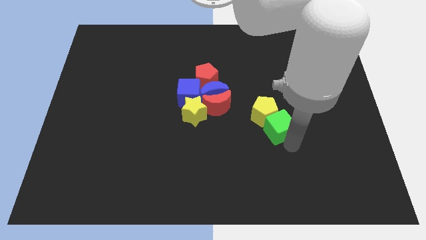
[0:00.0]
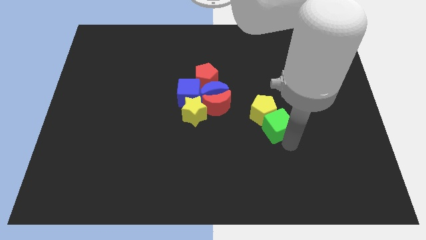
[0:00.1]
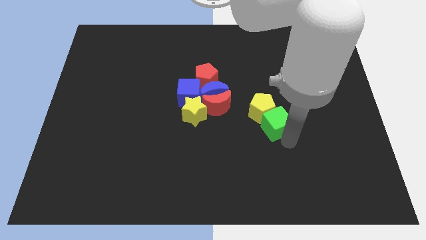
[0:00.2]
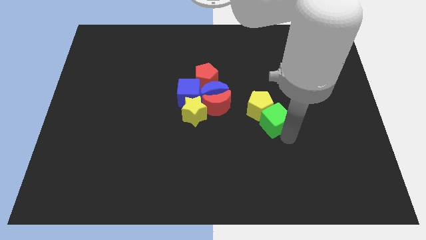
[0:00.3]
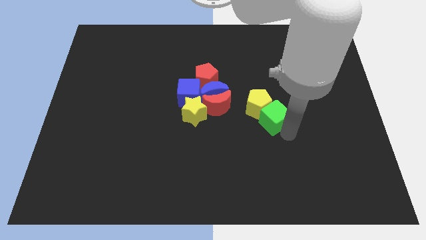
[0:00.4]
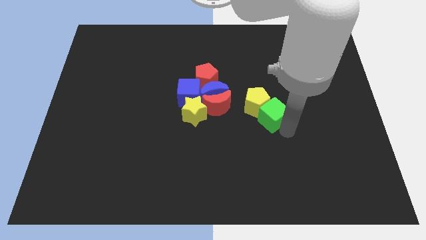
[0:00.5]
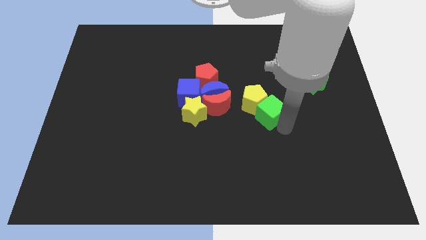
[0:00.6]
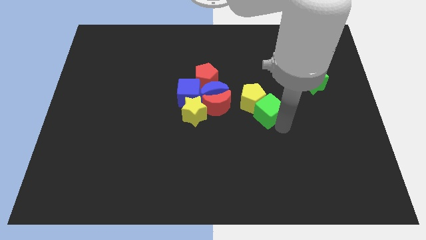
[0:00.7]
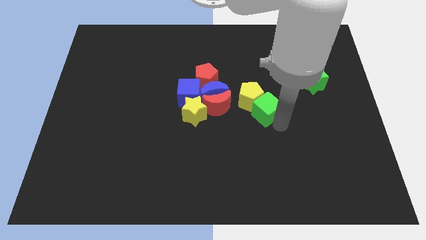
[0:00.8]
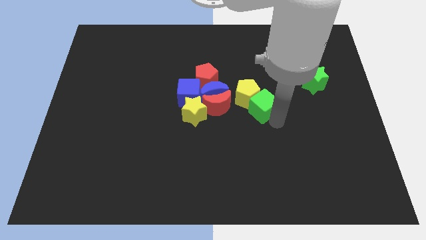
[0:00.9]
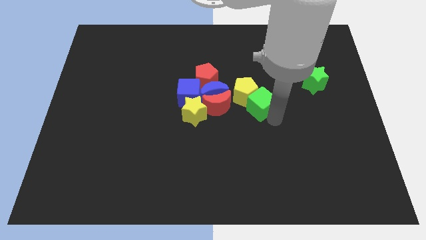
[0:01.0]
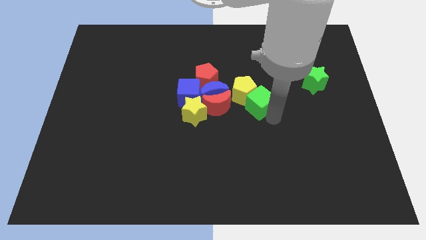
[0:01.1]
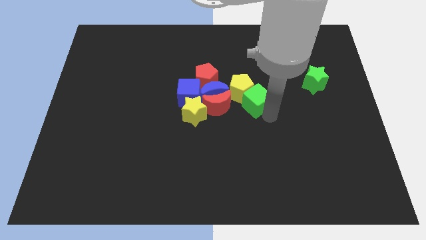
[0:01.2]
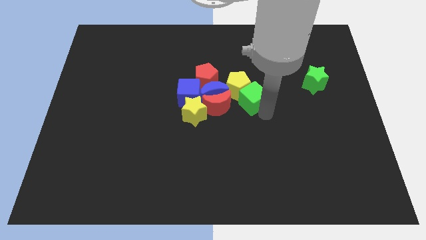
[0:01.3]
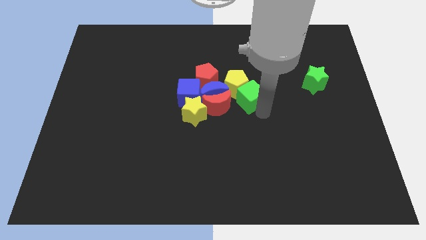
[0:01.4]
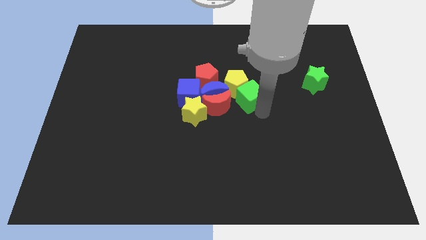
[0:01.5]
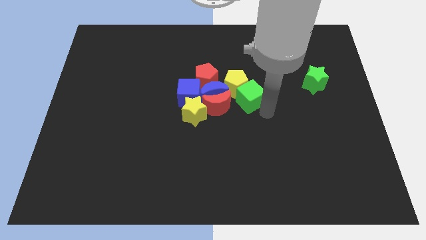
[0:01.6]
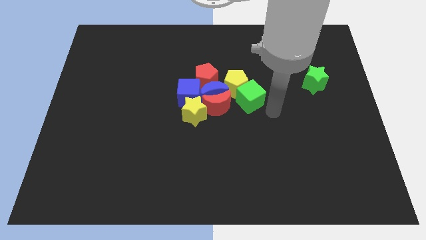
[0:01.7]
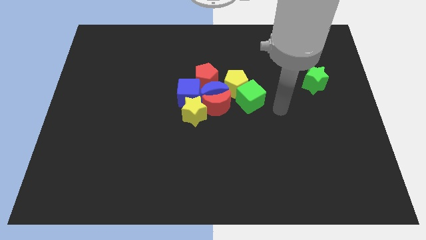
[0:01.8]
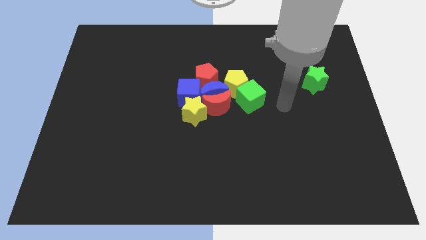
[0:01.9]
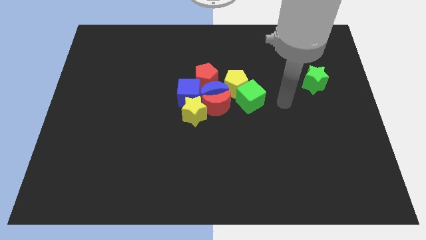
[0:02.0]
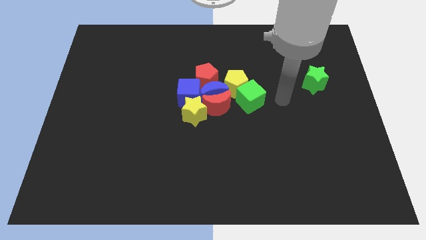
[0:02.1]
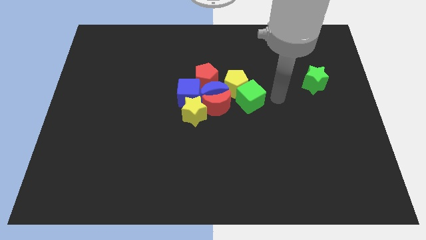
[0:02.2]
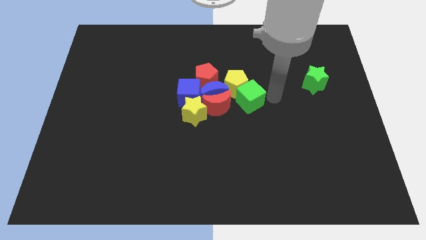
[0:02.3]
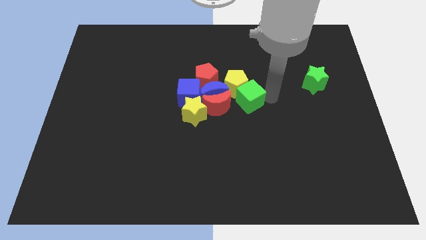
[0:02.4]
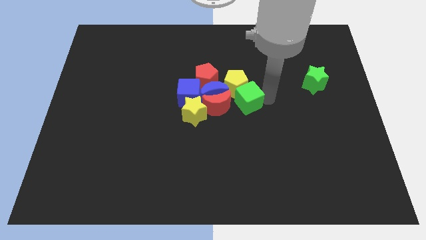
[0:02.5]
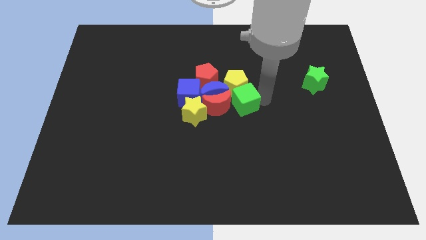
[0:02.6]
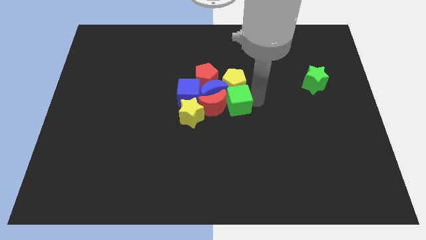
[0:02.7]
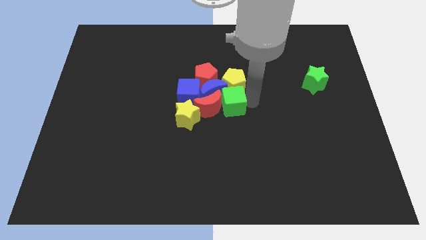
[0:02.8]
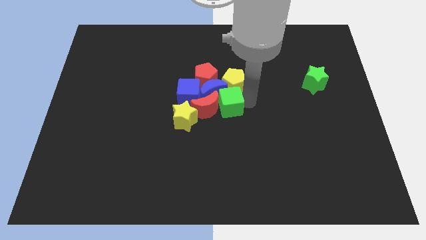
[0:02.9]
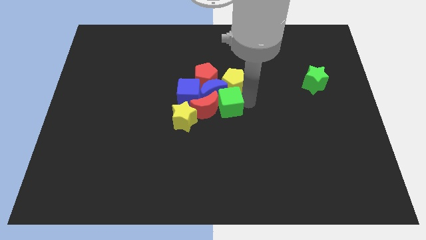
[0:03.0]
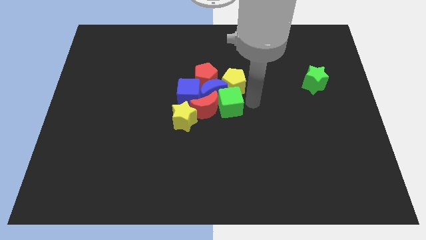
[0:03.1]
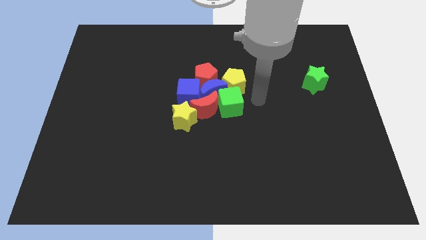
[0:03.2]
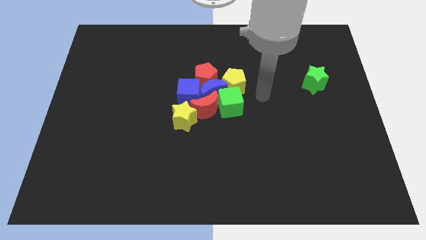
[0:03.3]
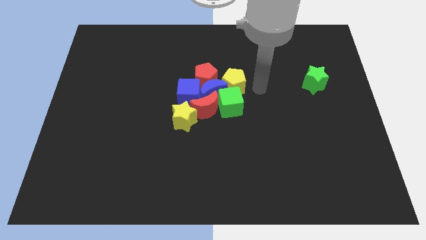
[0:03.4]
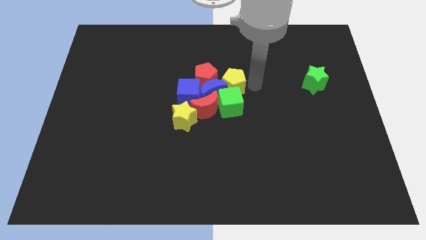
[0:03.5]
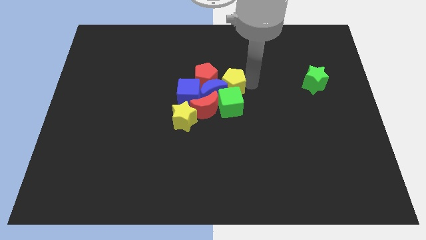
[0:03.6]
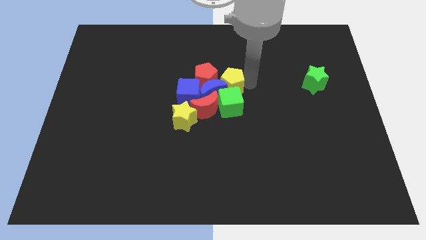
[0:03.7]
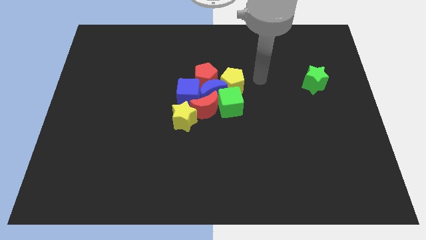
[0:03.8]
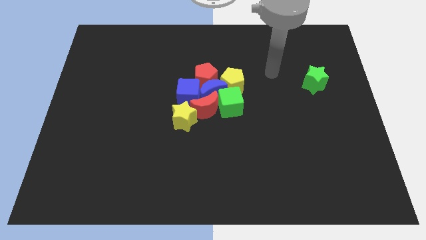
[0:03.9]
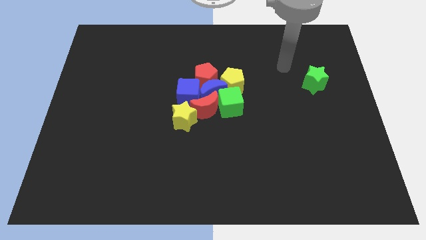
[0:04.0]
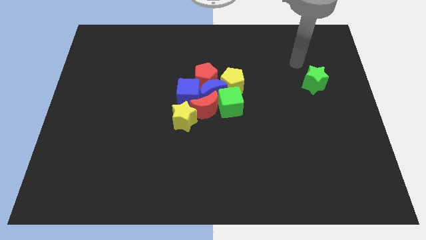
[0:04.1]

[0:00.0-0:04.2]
push the green cube into the red crescent

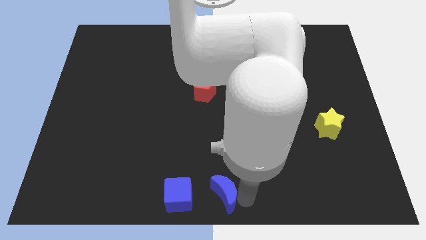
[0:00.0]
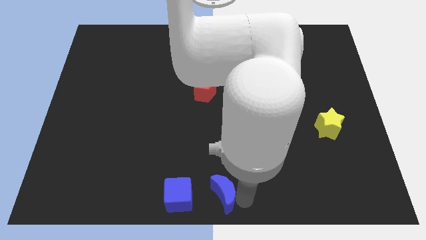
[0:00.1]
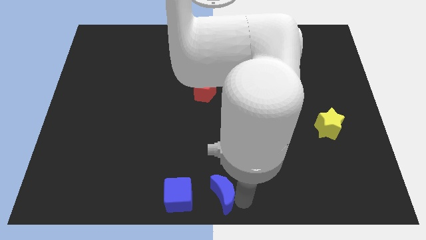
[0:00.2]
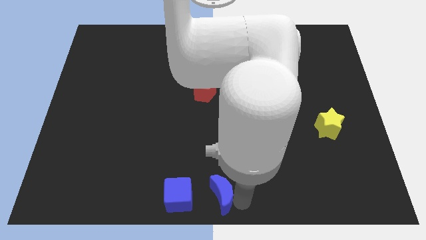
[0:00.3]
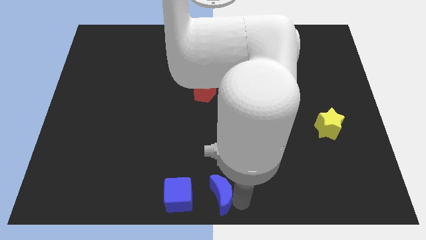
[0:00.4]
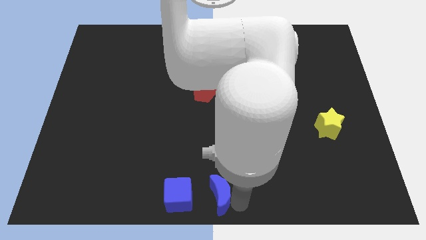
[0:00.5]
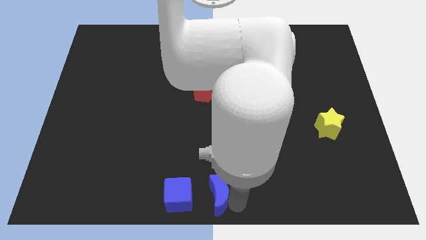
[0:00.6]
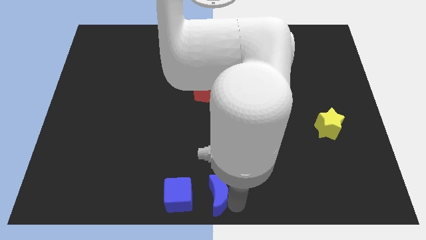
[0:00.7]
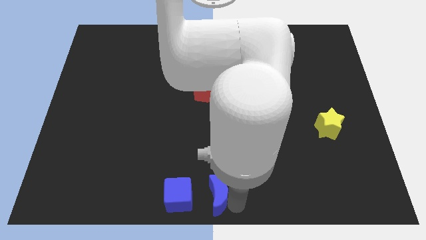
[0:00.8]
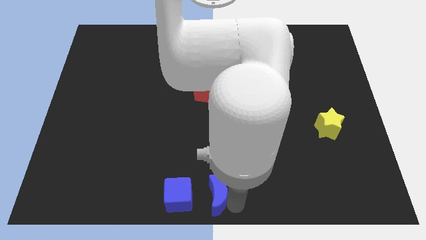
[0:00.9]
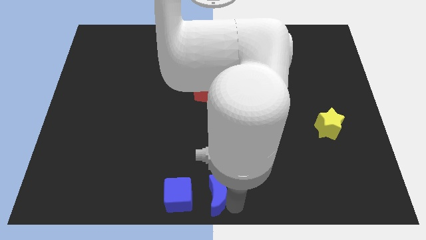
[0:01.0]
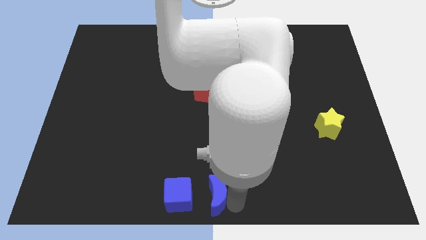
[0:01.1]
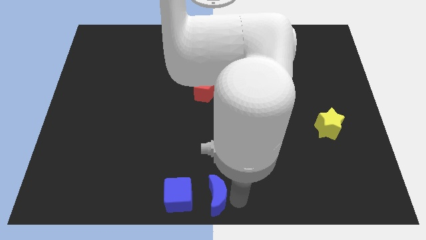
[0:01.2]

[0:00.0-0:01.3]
put blue moon right to blue cube

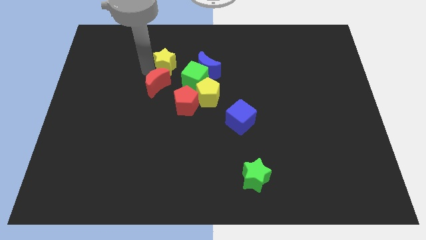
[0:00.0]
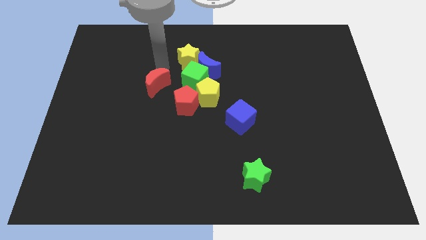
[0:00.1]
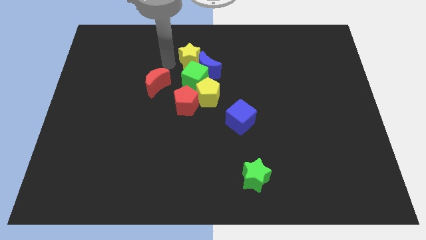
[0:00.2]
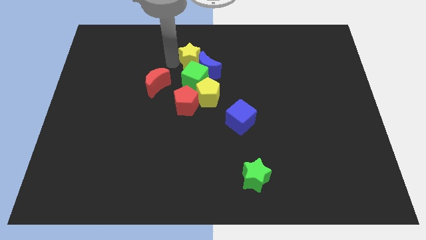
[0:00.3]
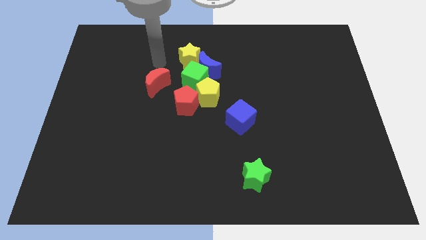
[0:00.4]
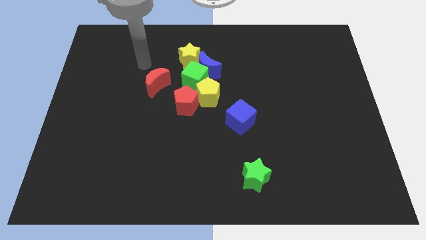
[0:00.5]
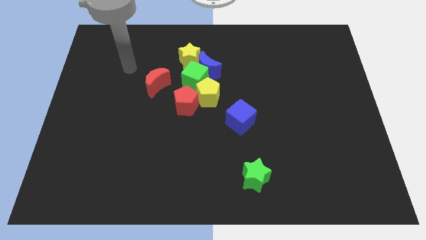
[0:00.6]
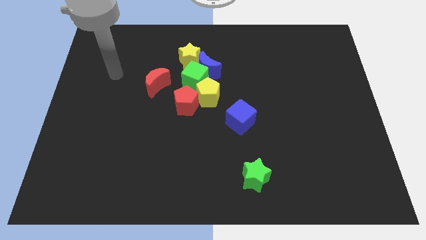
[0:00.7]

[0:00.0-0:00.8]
push the yellow star close to the blue moon

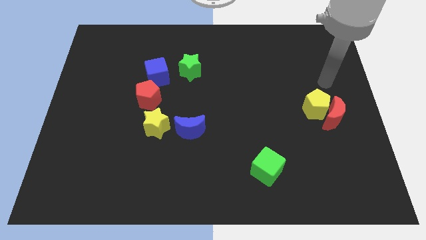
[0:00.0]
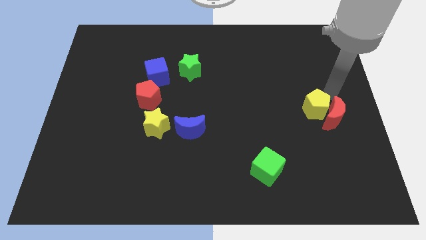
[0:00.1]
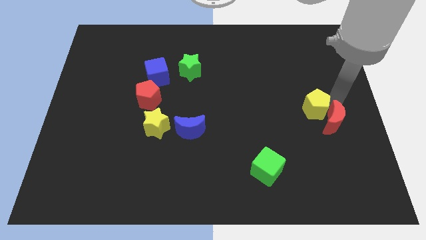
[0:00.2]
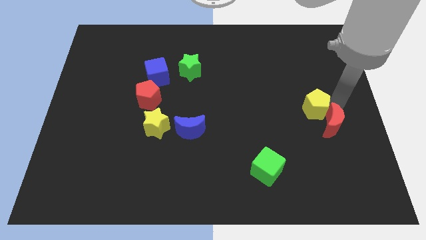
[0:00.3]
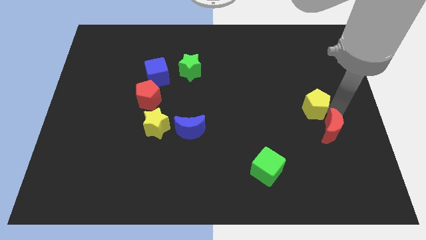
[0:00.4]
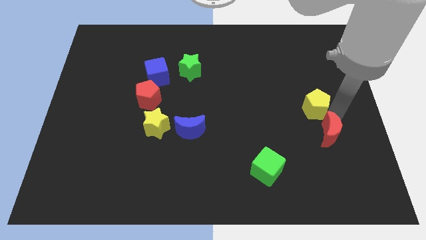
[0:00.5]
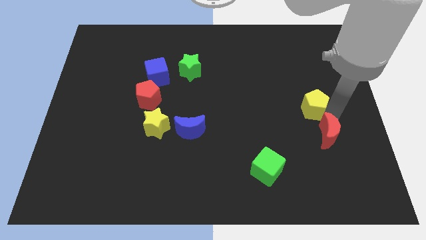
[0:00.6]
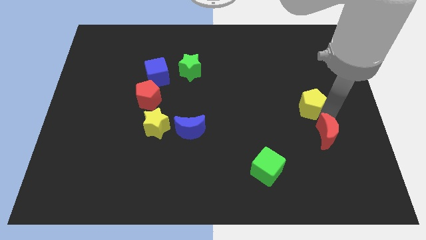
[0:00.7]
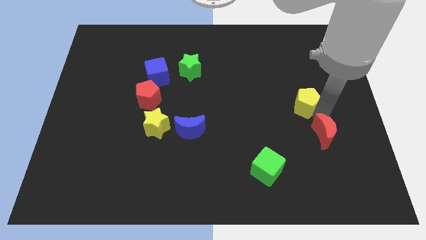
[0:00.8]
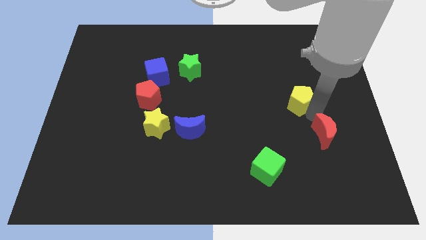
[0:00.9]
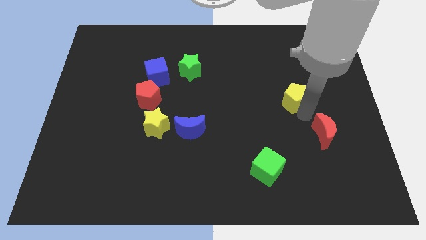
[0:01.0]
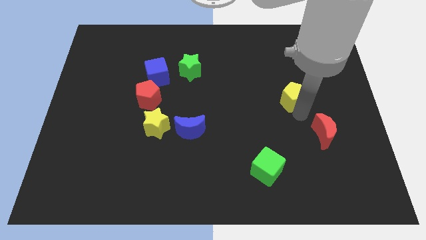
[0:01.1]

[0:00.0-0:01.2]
separate the yellow pentagon from the red crescent

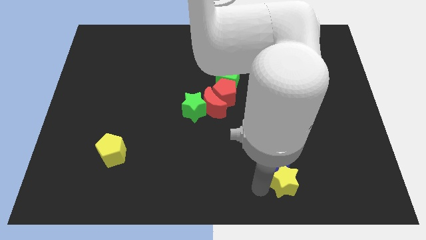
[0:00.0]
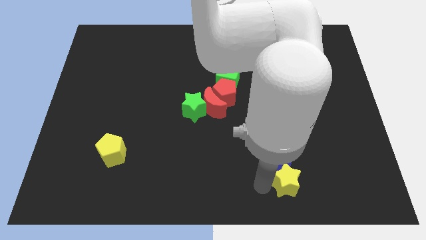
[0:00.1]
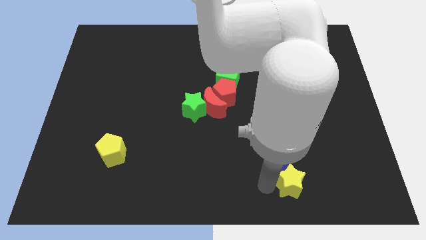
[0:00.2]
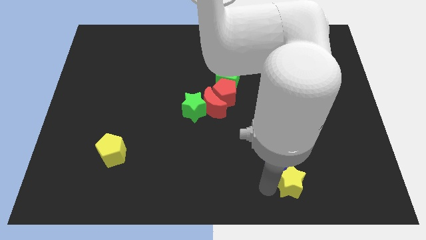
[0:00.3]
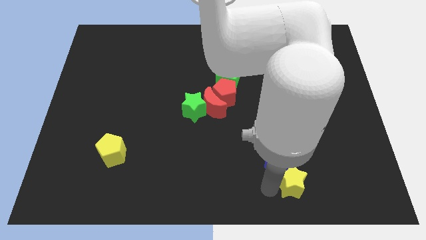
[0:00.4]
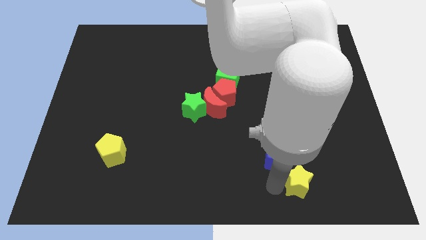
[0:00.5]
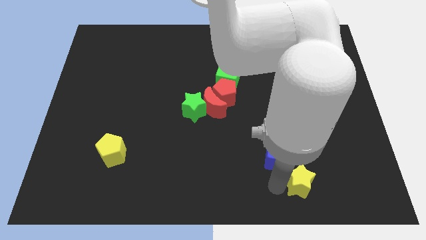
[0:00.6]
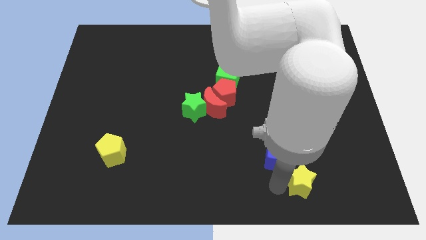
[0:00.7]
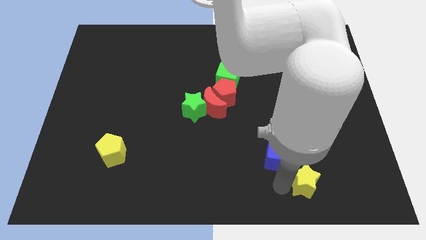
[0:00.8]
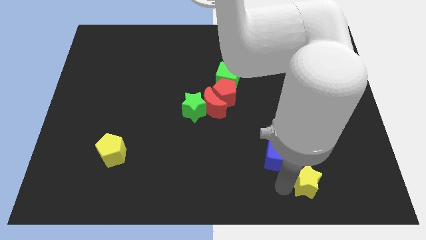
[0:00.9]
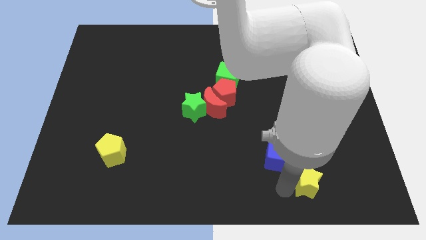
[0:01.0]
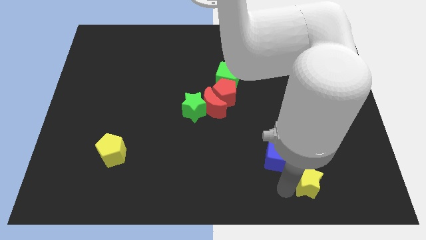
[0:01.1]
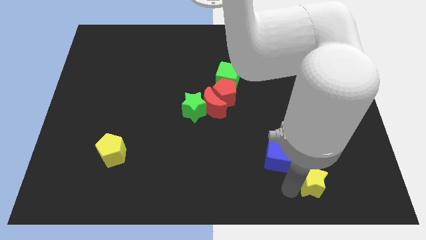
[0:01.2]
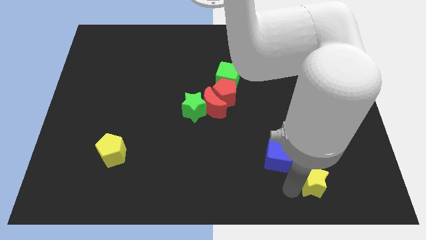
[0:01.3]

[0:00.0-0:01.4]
push yellow star below blue crescent

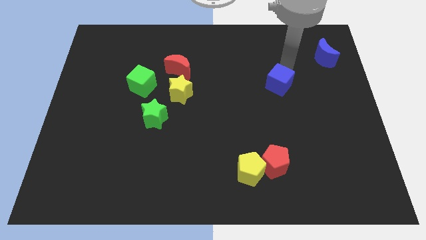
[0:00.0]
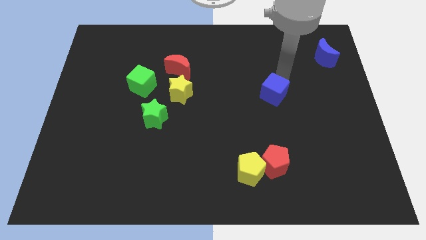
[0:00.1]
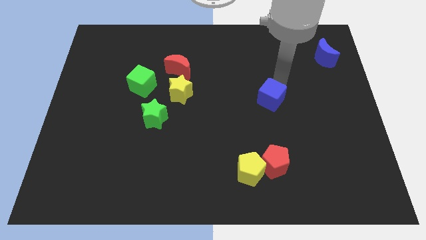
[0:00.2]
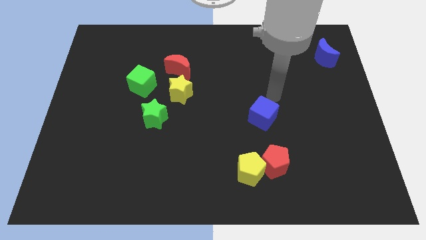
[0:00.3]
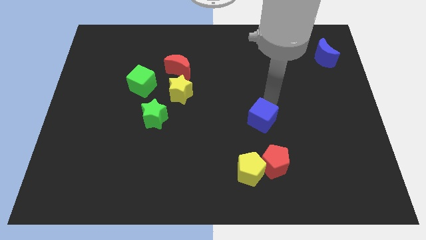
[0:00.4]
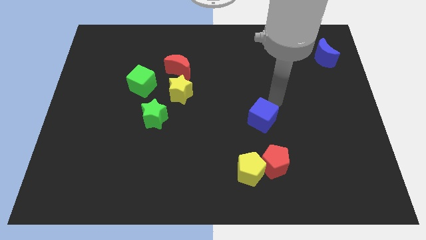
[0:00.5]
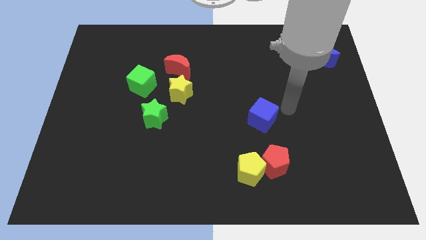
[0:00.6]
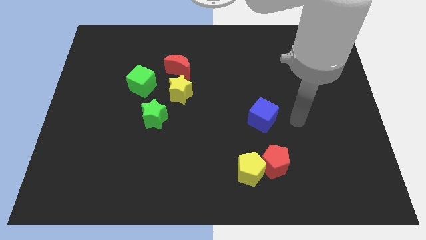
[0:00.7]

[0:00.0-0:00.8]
place blue cube vertical to red pentagon
